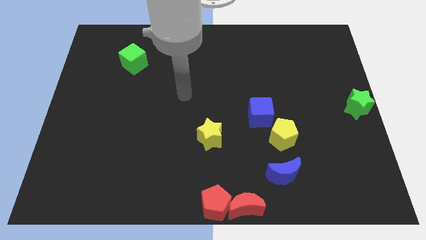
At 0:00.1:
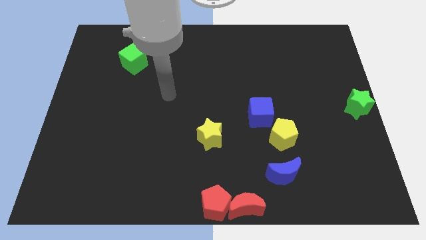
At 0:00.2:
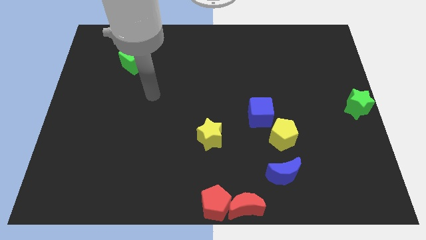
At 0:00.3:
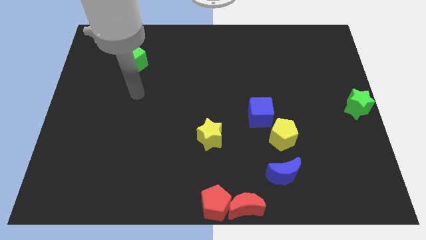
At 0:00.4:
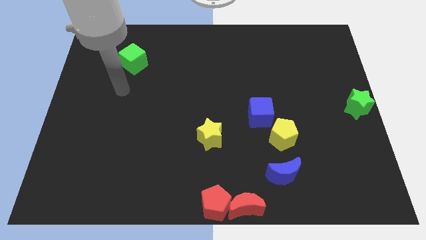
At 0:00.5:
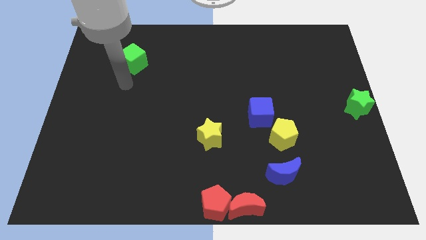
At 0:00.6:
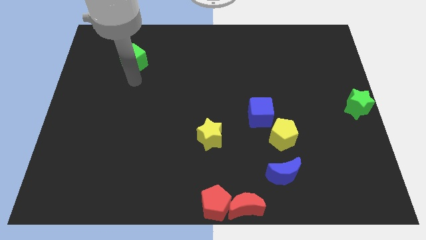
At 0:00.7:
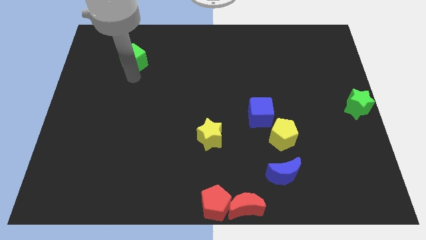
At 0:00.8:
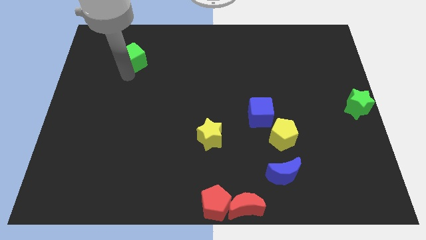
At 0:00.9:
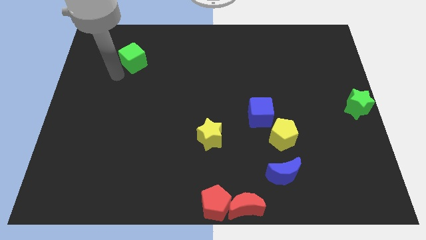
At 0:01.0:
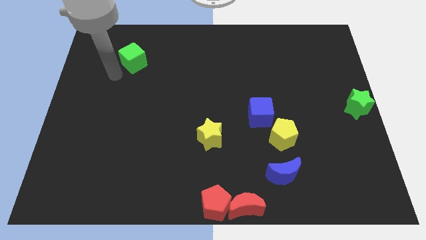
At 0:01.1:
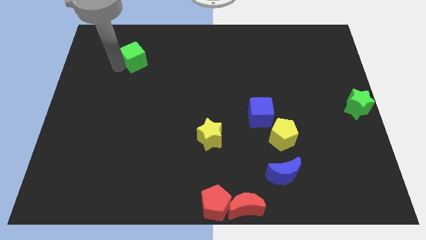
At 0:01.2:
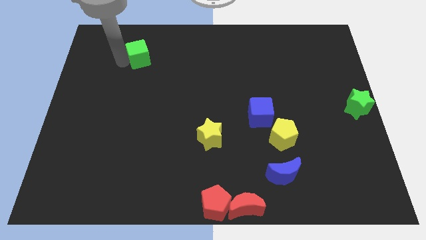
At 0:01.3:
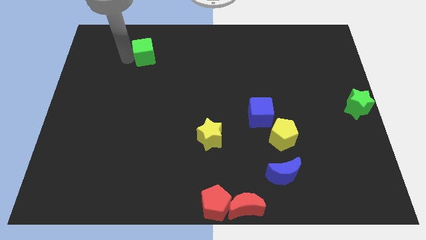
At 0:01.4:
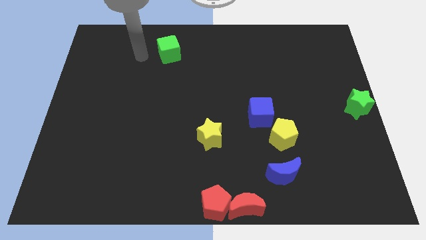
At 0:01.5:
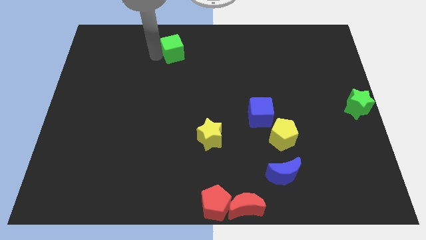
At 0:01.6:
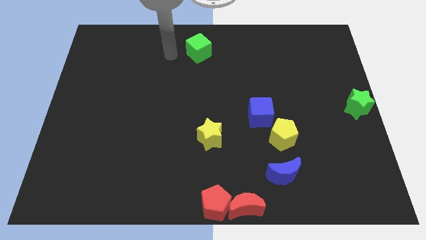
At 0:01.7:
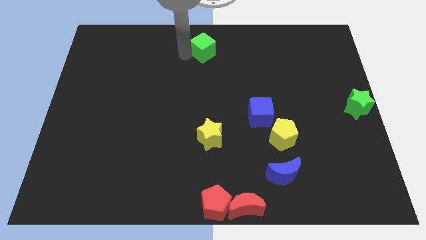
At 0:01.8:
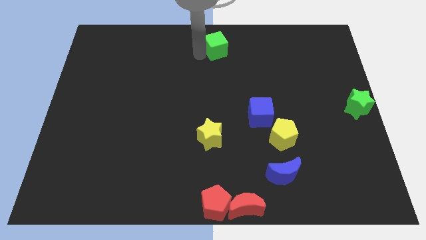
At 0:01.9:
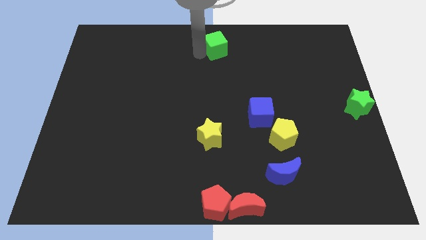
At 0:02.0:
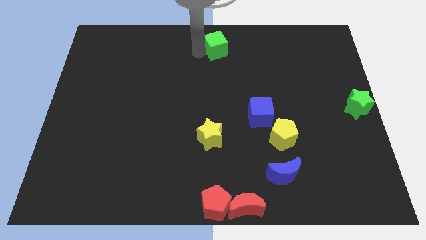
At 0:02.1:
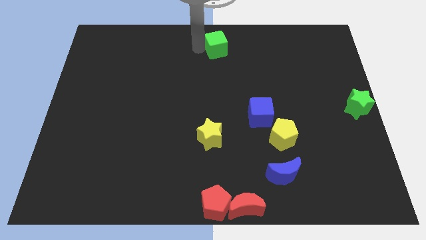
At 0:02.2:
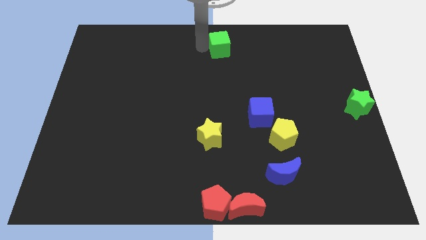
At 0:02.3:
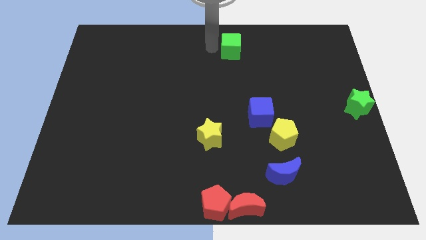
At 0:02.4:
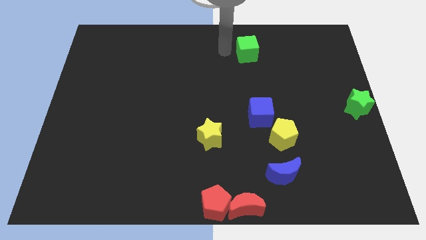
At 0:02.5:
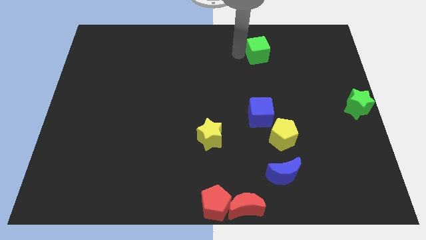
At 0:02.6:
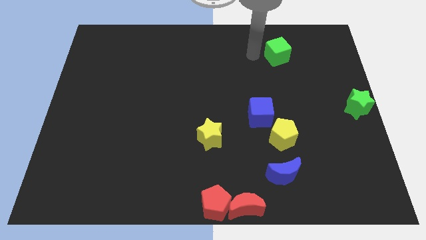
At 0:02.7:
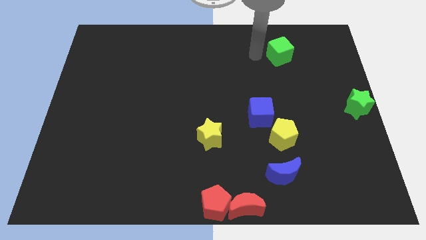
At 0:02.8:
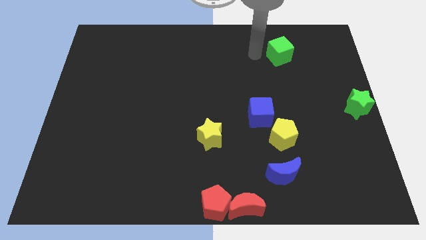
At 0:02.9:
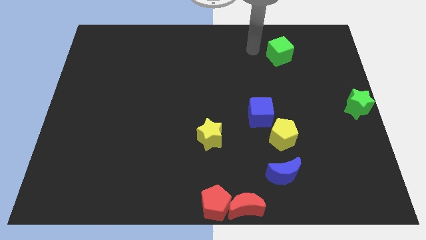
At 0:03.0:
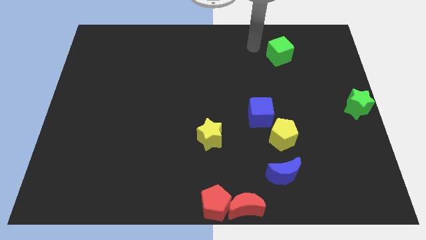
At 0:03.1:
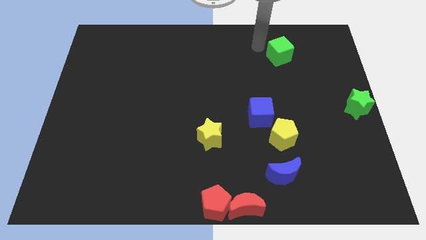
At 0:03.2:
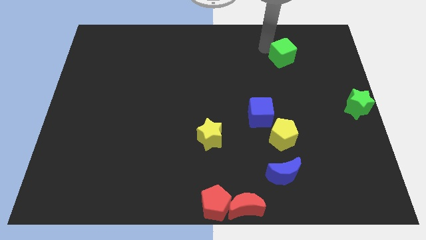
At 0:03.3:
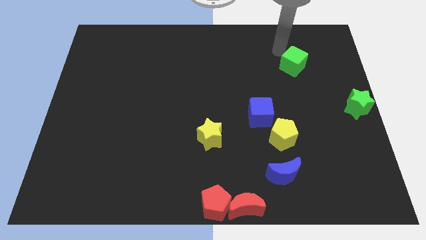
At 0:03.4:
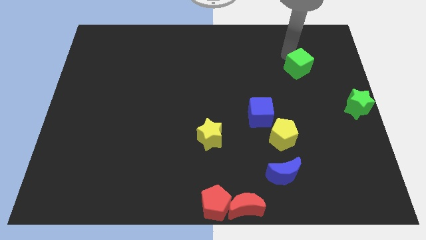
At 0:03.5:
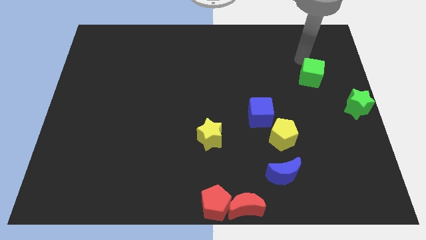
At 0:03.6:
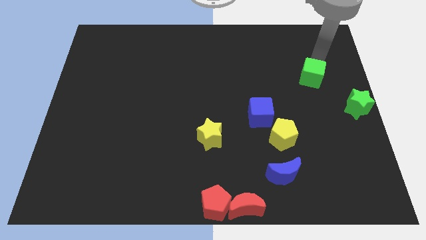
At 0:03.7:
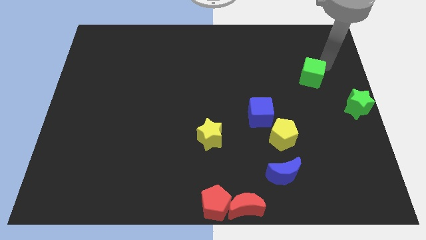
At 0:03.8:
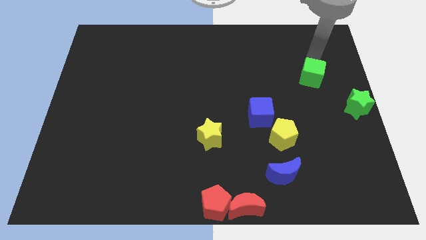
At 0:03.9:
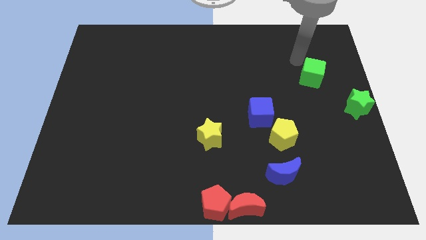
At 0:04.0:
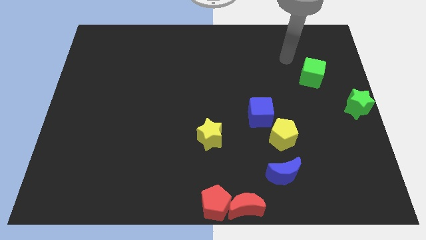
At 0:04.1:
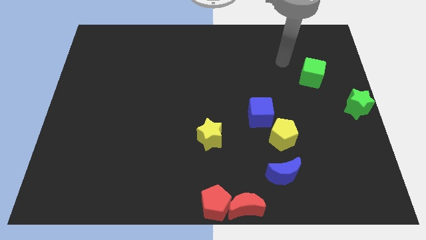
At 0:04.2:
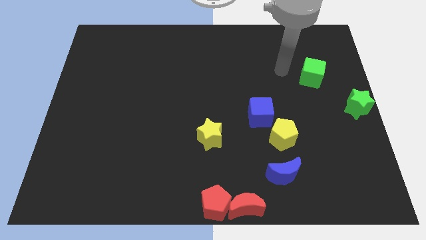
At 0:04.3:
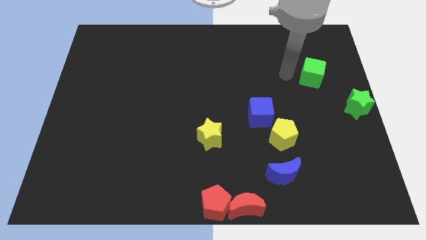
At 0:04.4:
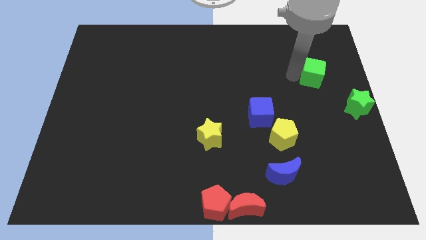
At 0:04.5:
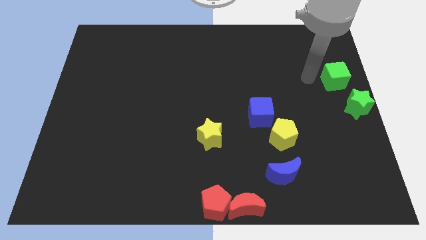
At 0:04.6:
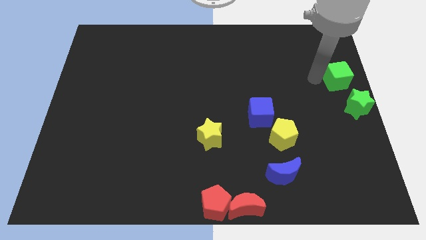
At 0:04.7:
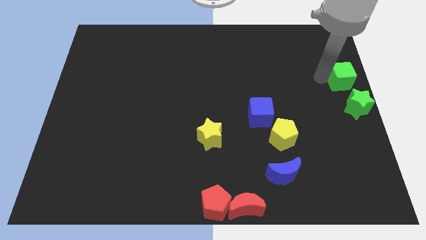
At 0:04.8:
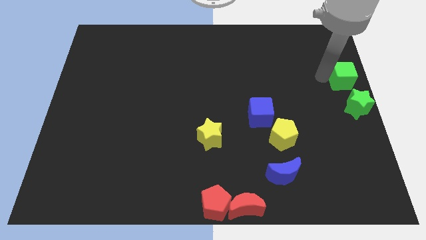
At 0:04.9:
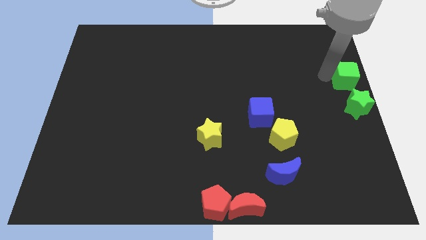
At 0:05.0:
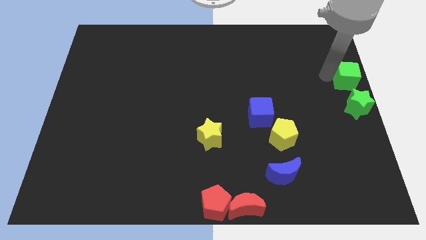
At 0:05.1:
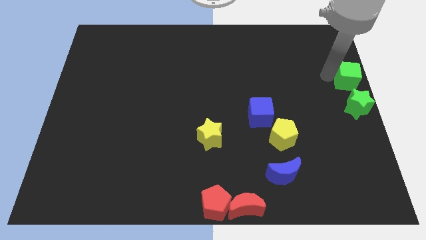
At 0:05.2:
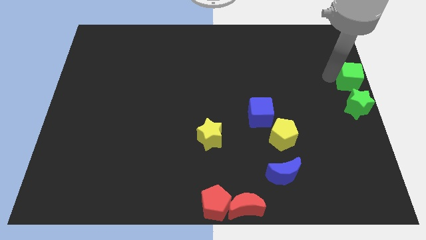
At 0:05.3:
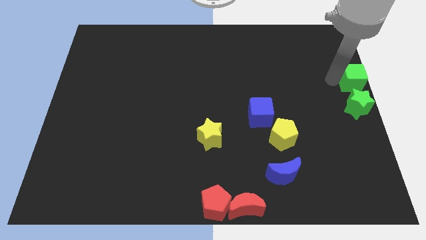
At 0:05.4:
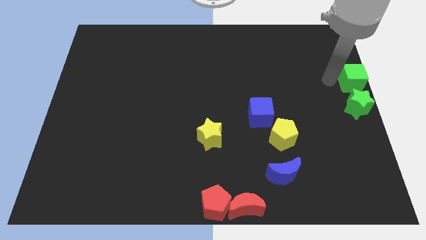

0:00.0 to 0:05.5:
place the green cube above the green star

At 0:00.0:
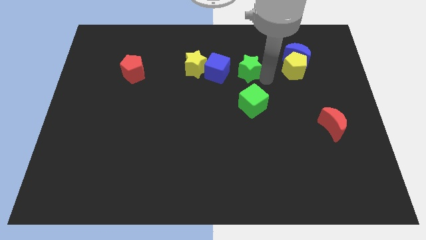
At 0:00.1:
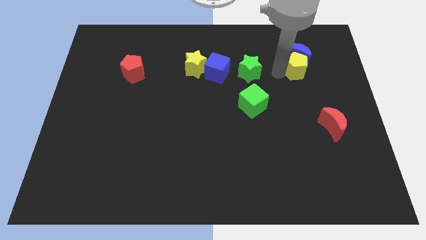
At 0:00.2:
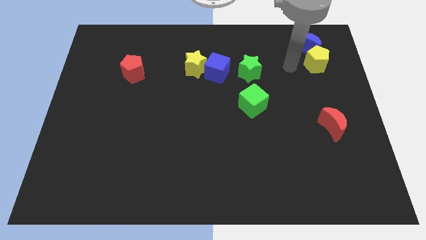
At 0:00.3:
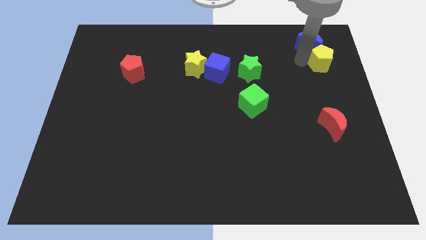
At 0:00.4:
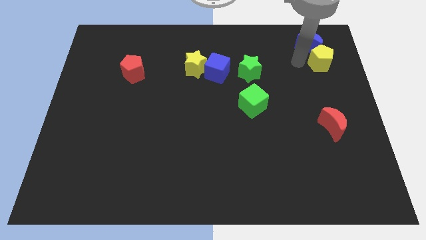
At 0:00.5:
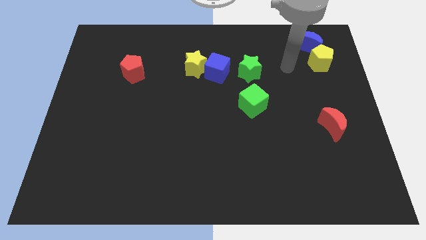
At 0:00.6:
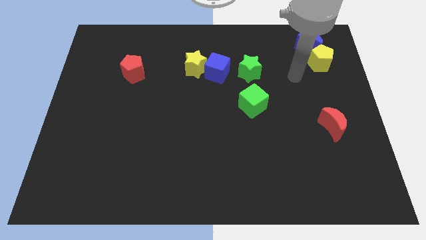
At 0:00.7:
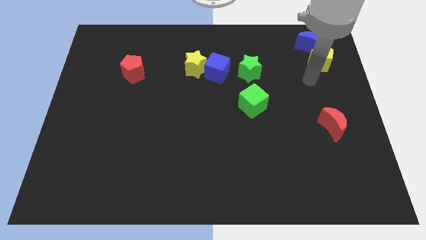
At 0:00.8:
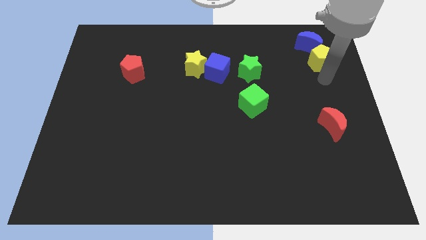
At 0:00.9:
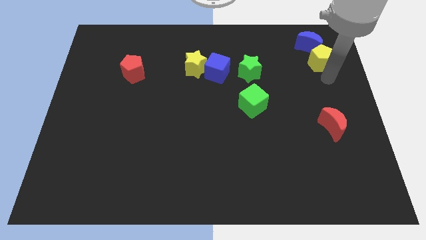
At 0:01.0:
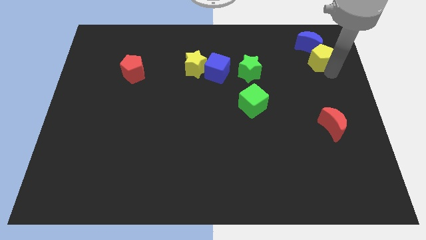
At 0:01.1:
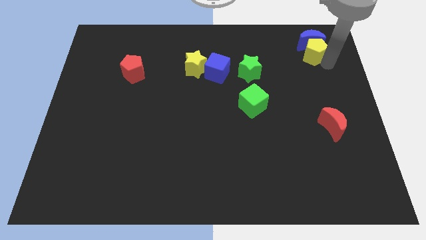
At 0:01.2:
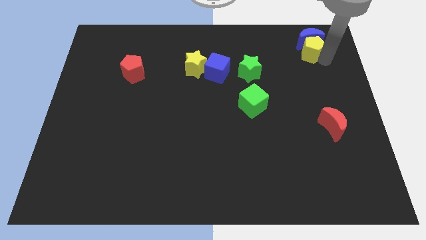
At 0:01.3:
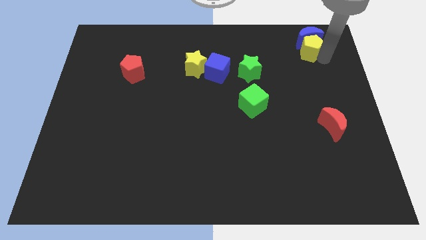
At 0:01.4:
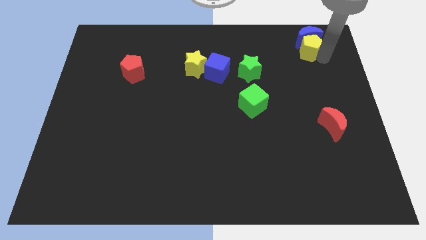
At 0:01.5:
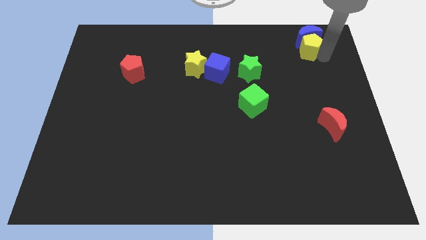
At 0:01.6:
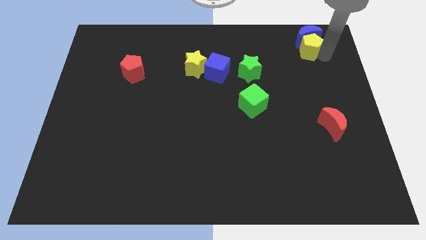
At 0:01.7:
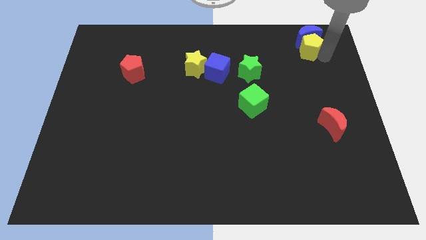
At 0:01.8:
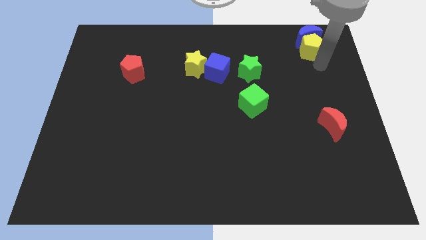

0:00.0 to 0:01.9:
drag yellow pentagon and blue crescent together slightly to the top side of the board

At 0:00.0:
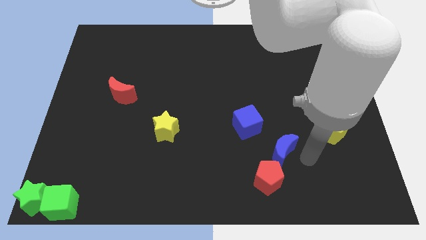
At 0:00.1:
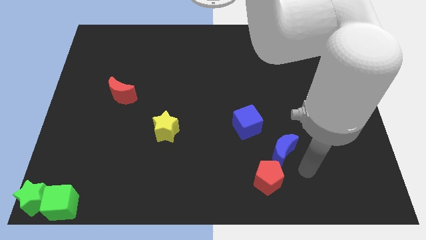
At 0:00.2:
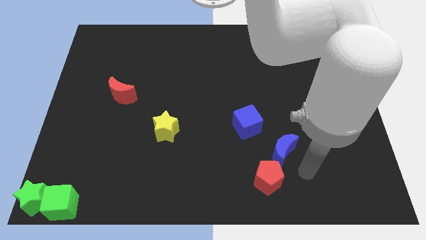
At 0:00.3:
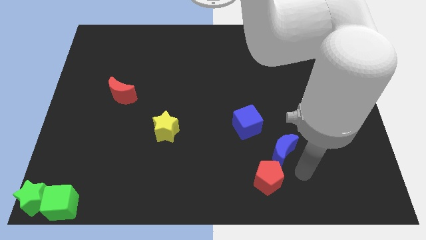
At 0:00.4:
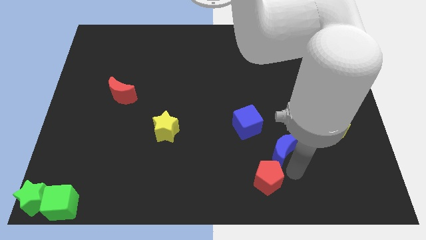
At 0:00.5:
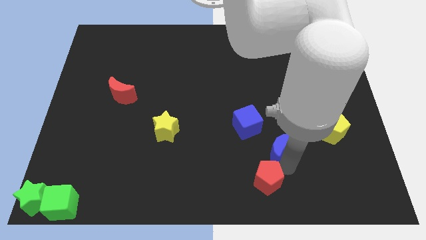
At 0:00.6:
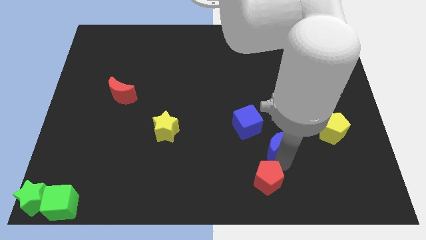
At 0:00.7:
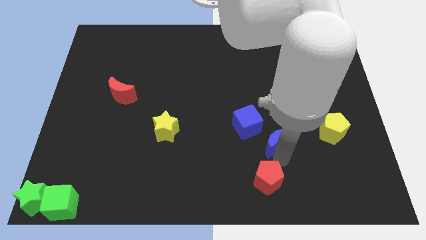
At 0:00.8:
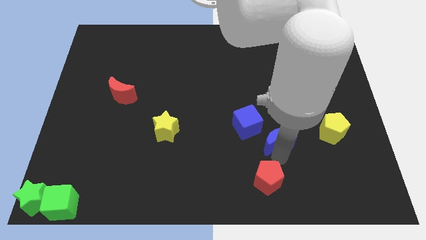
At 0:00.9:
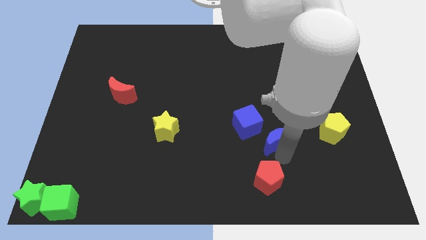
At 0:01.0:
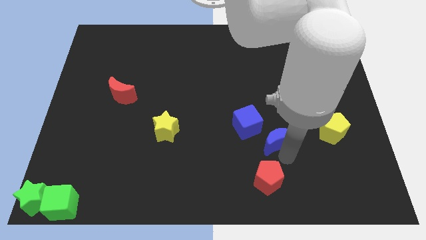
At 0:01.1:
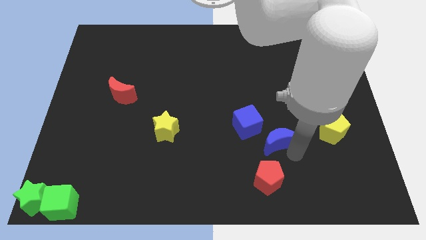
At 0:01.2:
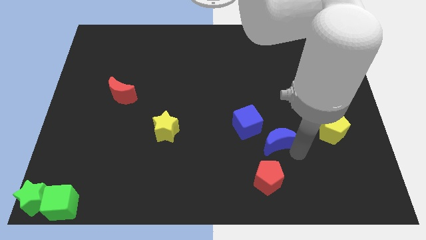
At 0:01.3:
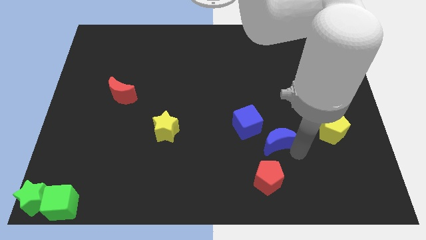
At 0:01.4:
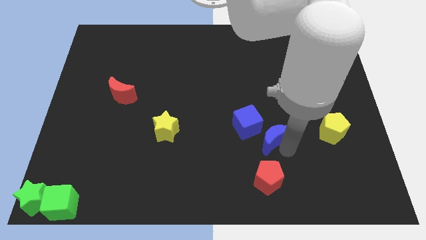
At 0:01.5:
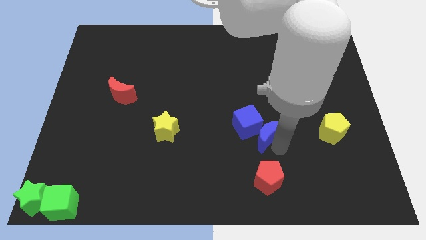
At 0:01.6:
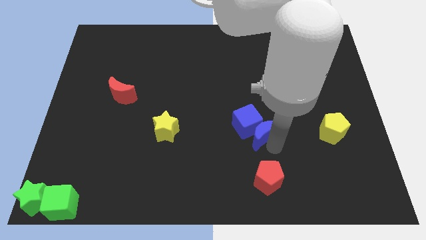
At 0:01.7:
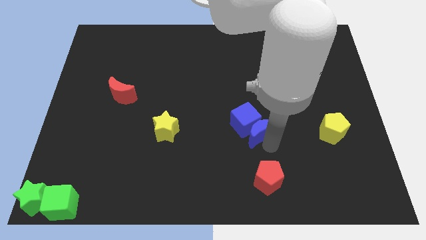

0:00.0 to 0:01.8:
put the blue moon into the blue cube
